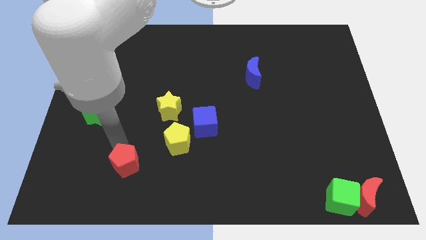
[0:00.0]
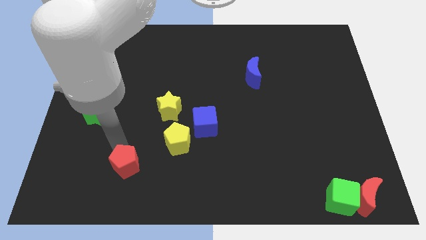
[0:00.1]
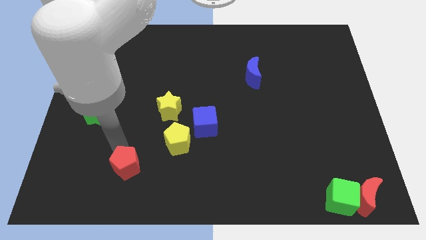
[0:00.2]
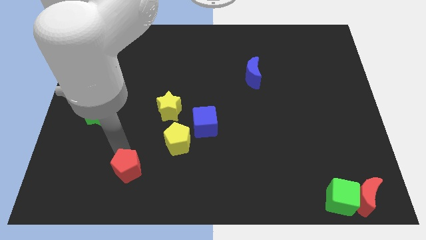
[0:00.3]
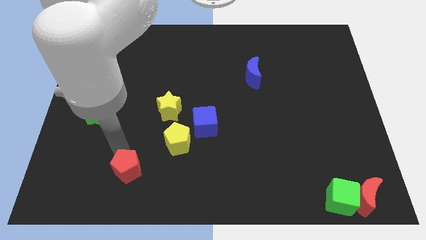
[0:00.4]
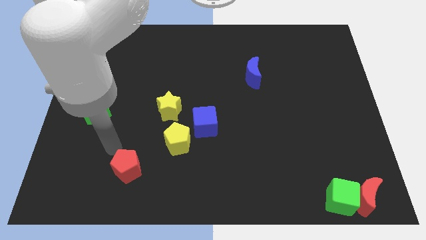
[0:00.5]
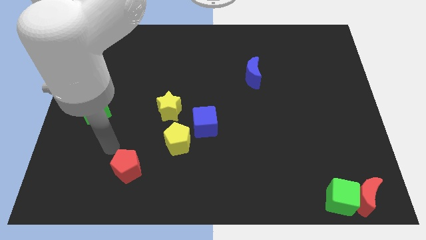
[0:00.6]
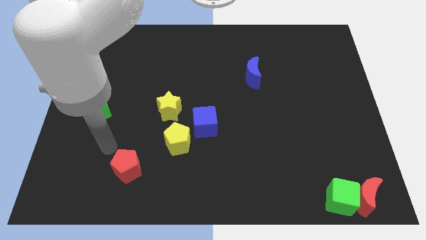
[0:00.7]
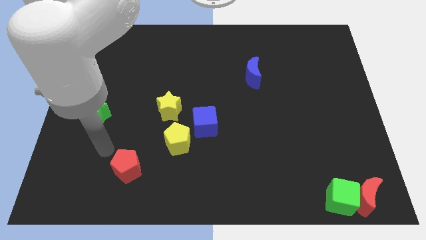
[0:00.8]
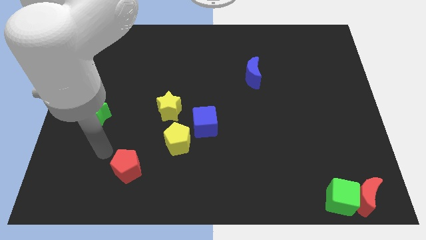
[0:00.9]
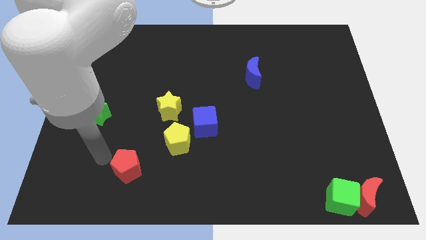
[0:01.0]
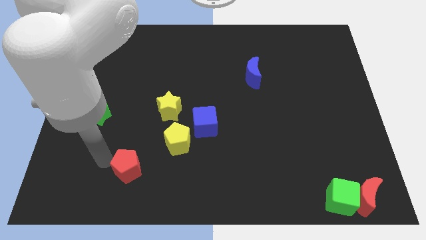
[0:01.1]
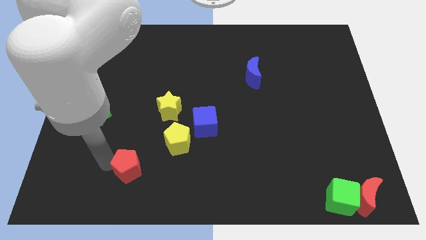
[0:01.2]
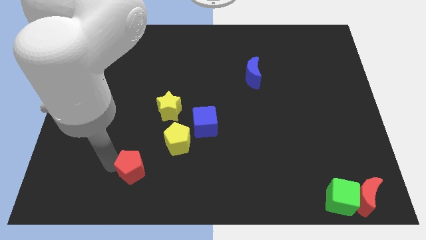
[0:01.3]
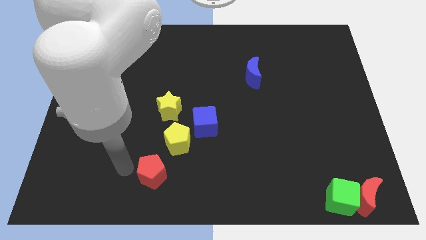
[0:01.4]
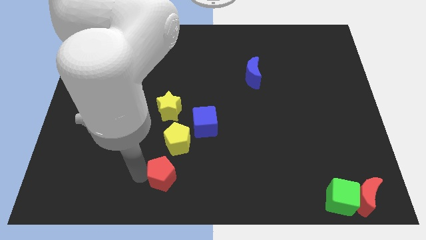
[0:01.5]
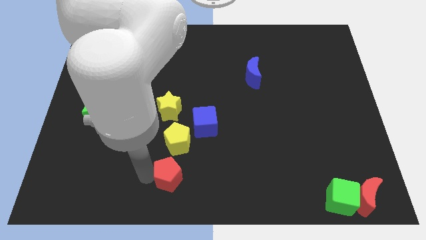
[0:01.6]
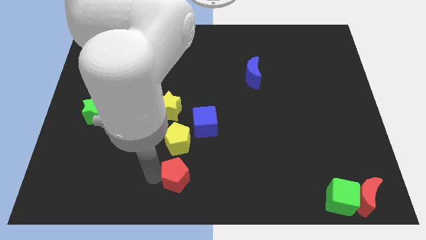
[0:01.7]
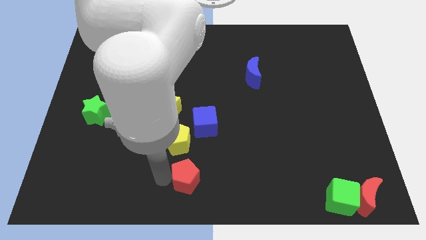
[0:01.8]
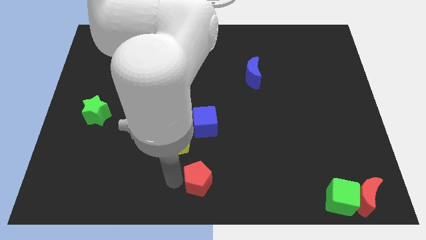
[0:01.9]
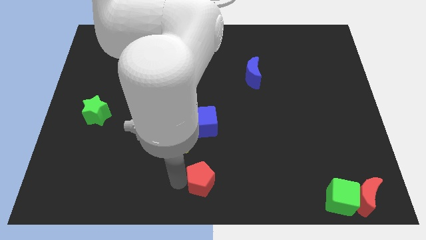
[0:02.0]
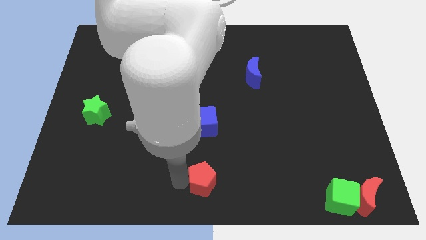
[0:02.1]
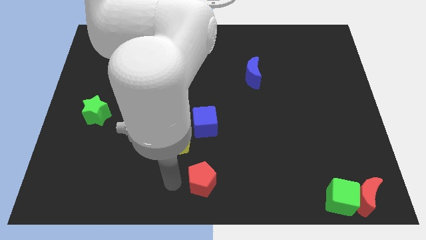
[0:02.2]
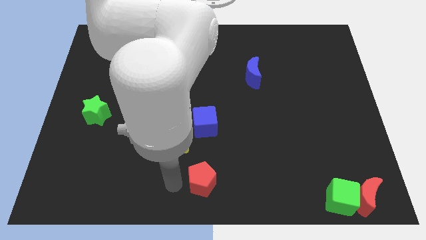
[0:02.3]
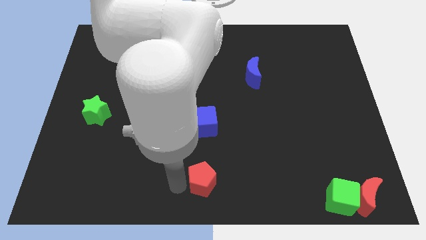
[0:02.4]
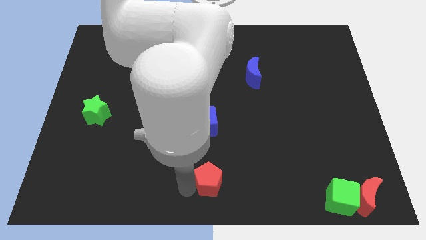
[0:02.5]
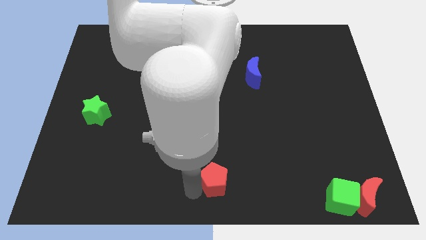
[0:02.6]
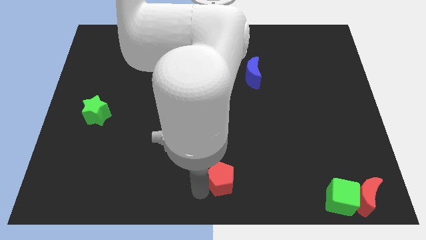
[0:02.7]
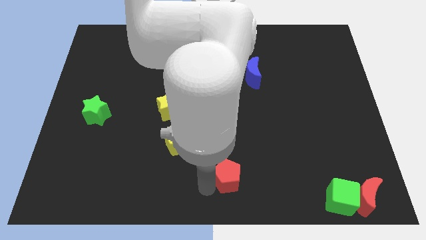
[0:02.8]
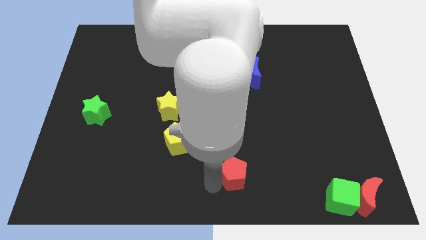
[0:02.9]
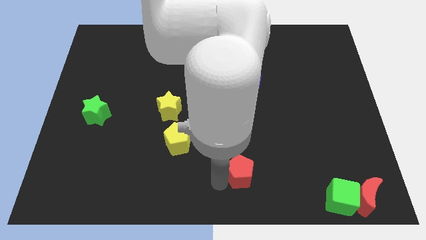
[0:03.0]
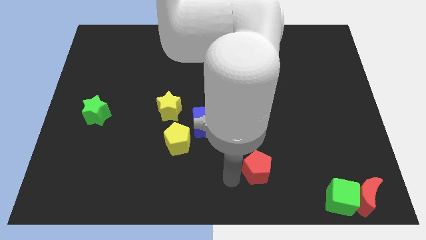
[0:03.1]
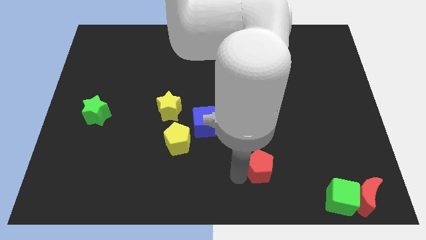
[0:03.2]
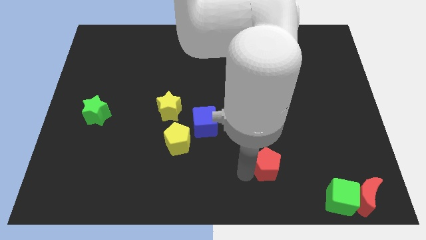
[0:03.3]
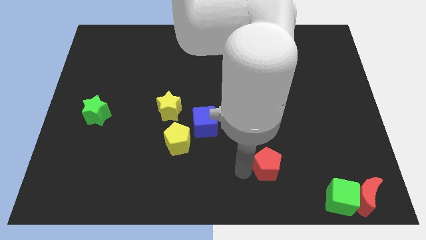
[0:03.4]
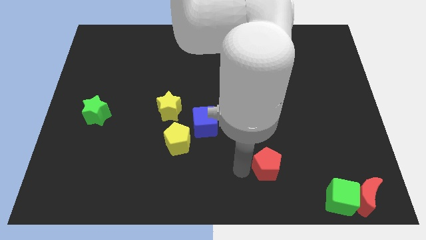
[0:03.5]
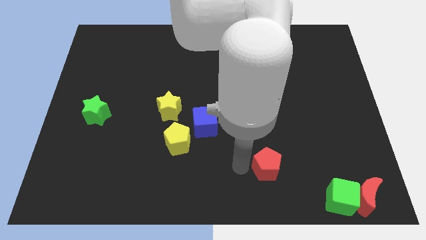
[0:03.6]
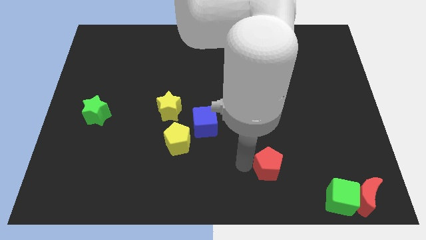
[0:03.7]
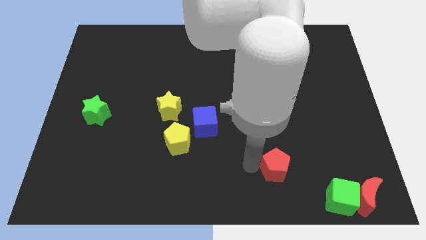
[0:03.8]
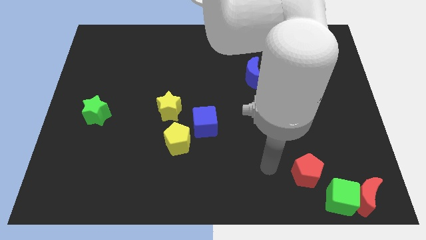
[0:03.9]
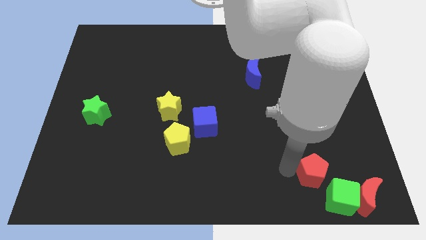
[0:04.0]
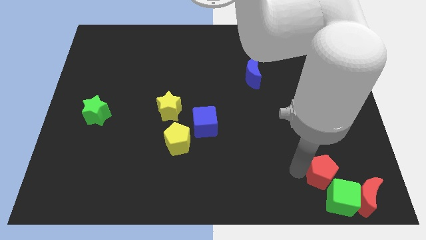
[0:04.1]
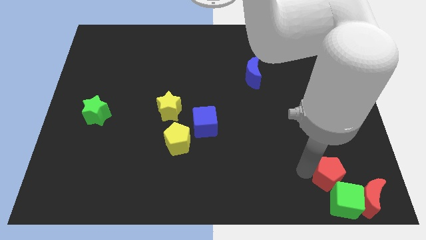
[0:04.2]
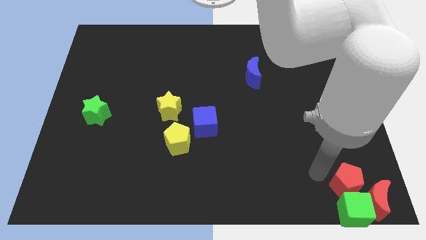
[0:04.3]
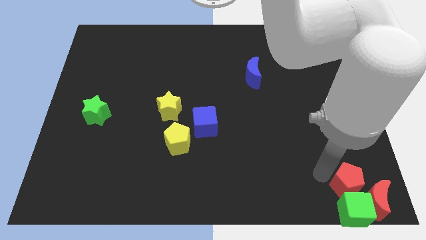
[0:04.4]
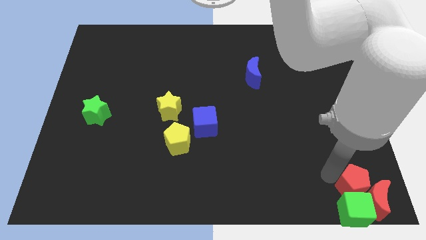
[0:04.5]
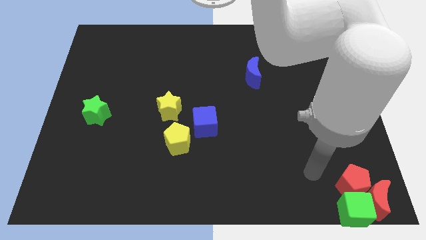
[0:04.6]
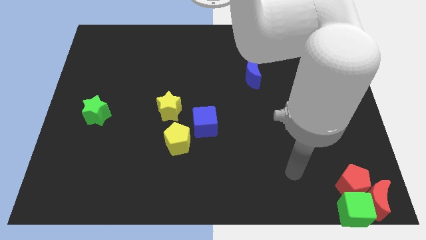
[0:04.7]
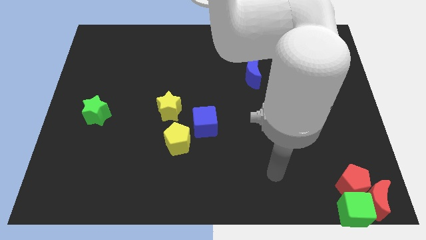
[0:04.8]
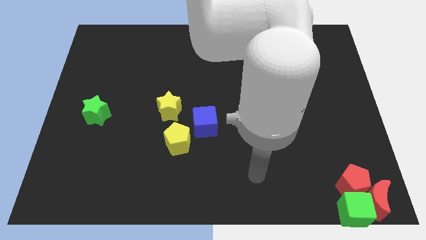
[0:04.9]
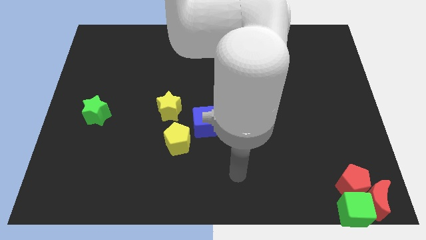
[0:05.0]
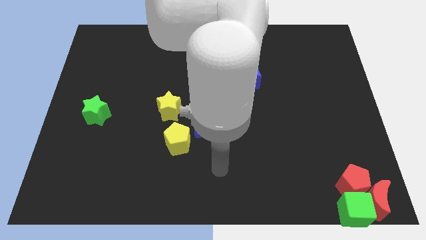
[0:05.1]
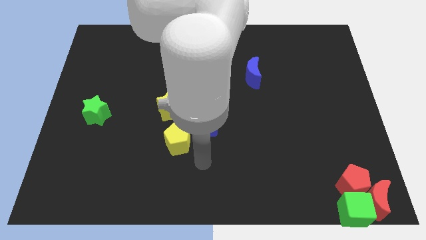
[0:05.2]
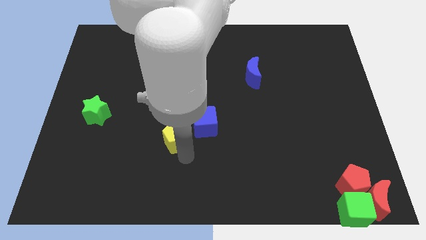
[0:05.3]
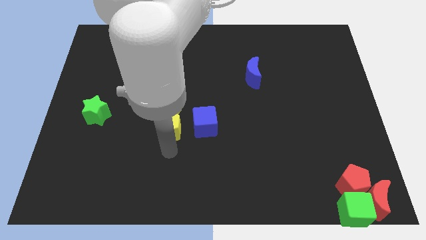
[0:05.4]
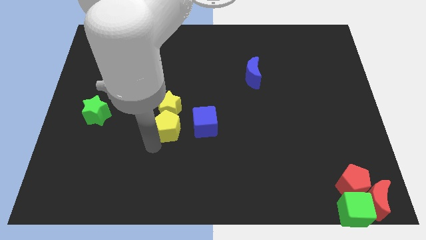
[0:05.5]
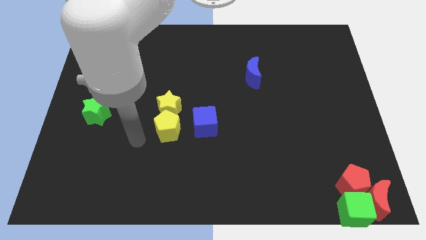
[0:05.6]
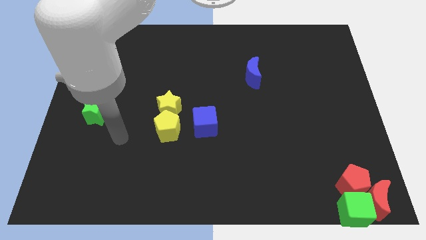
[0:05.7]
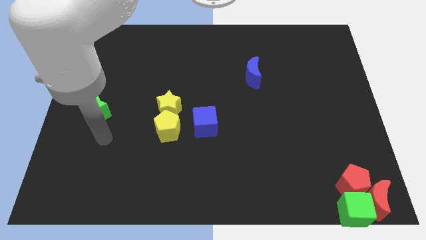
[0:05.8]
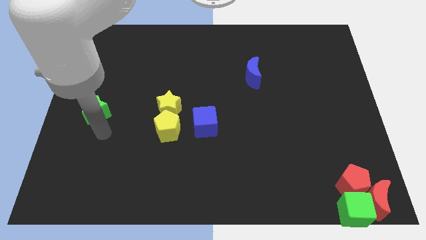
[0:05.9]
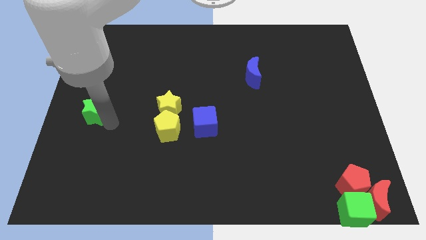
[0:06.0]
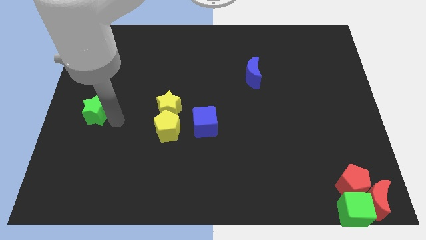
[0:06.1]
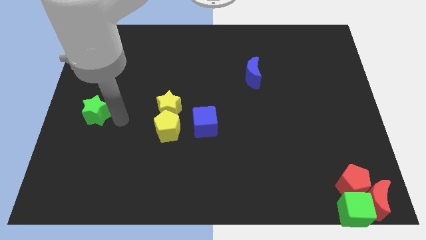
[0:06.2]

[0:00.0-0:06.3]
move red pentagon above green cube

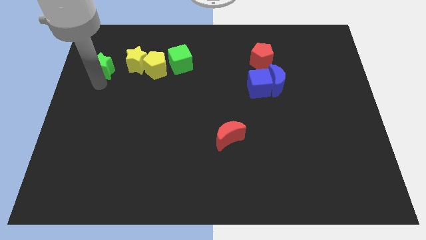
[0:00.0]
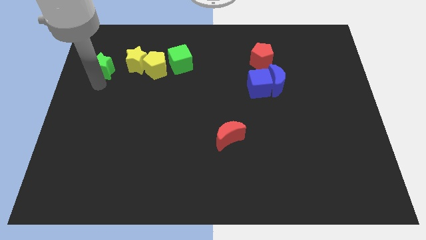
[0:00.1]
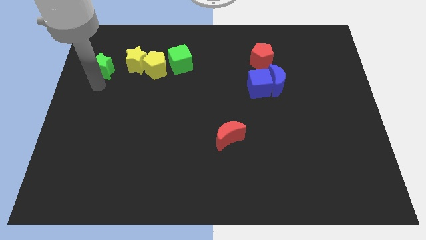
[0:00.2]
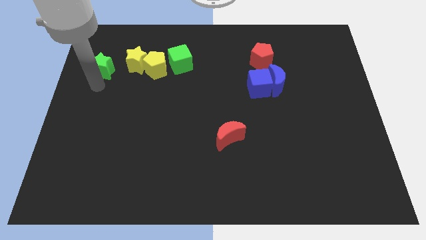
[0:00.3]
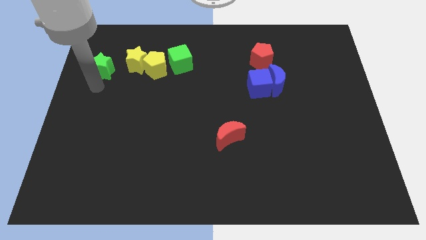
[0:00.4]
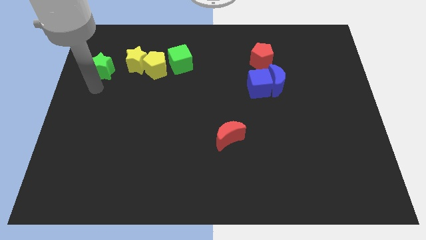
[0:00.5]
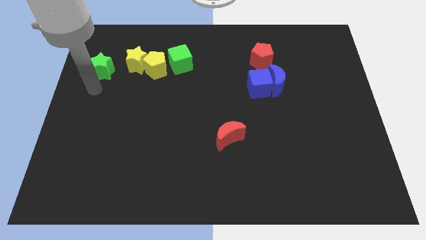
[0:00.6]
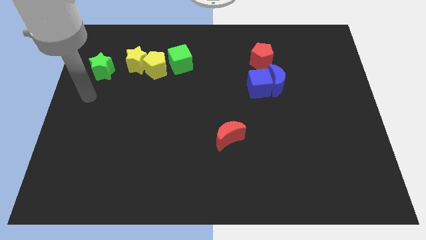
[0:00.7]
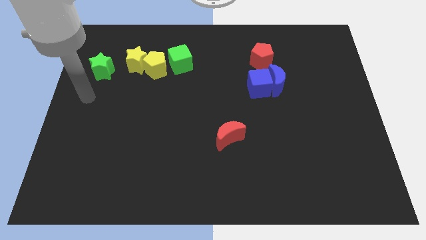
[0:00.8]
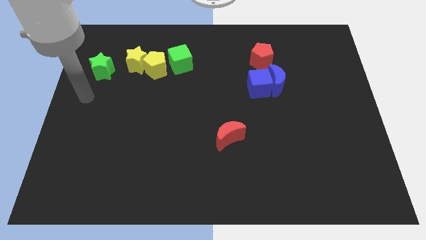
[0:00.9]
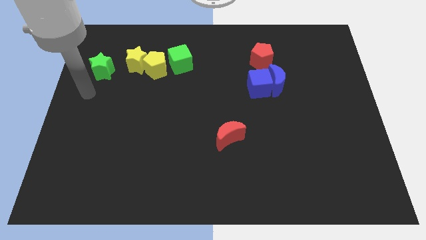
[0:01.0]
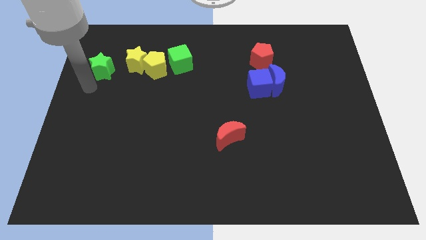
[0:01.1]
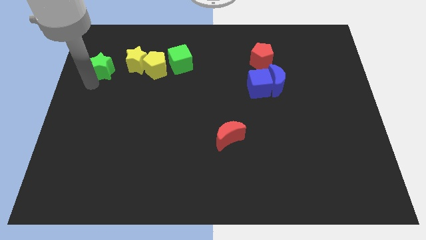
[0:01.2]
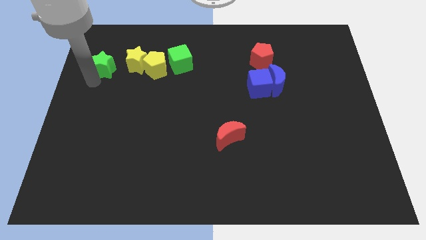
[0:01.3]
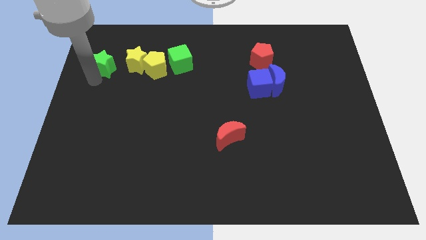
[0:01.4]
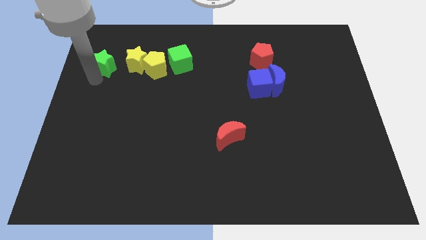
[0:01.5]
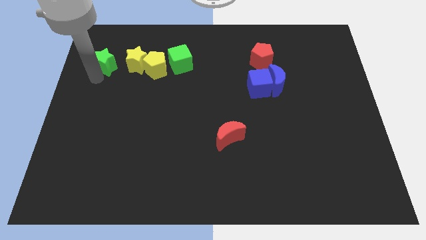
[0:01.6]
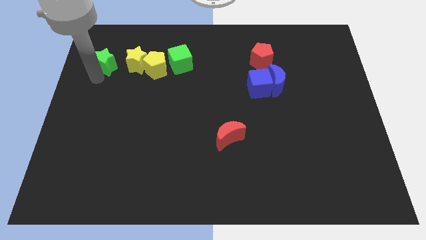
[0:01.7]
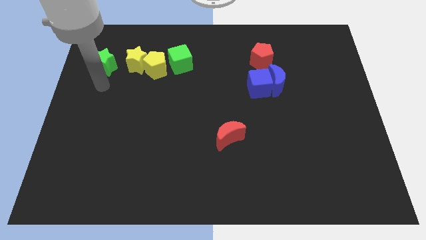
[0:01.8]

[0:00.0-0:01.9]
place green star to the left side of the board

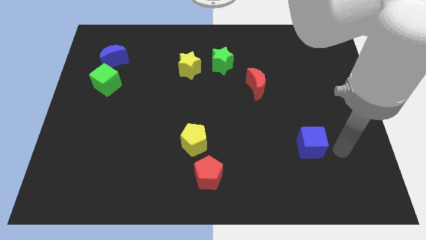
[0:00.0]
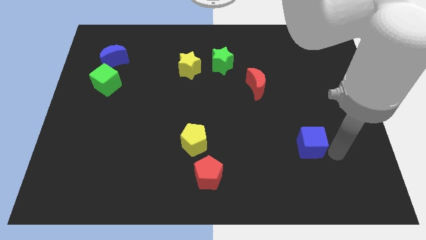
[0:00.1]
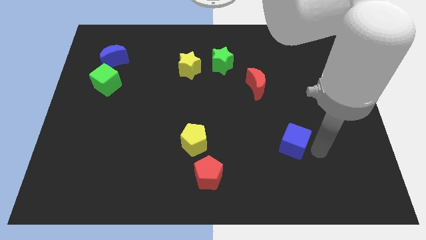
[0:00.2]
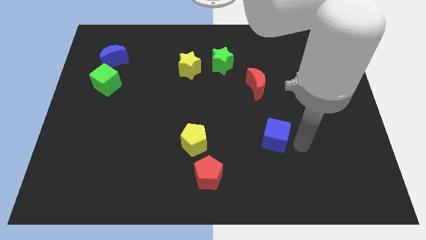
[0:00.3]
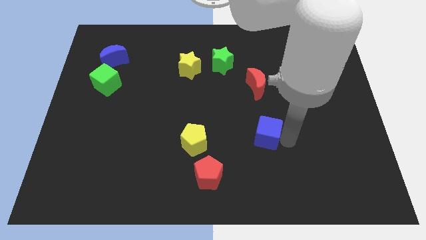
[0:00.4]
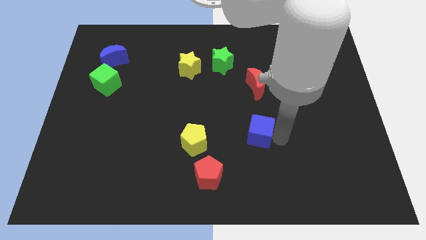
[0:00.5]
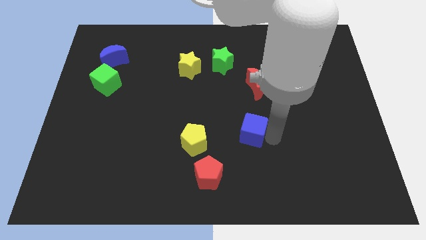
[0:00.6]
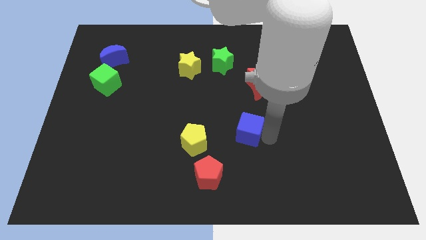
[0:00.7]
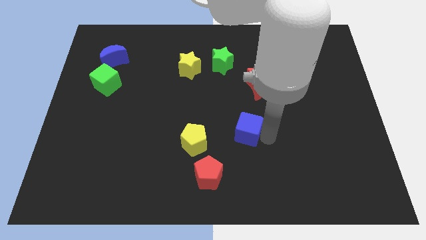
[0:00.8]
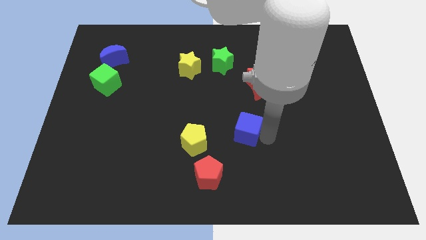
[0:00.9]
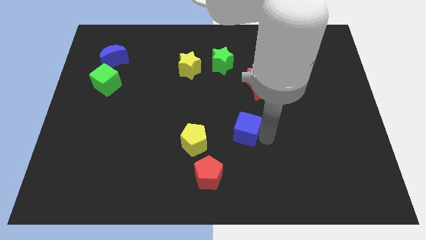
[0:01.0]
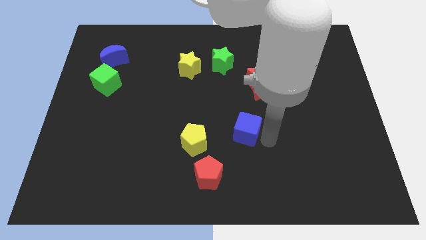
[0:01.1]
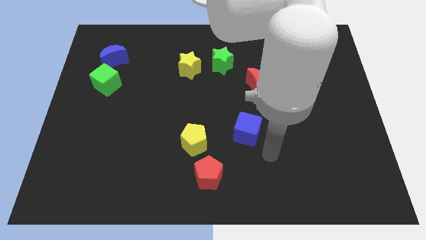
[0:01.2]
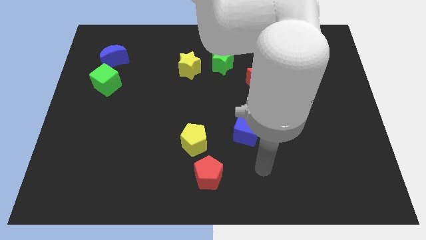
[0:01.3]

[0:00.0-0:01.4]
move the blue cube to the left side of the board
